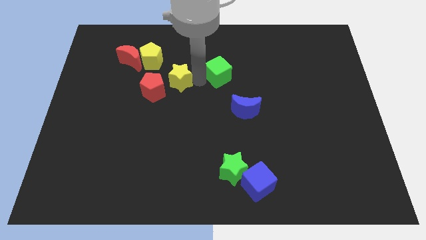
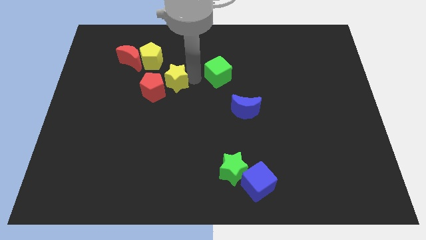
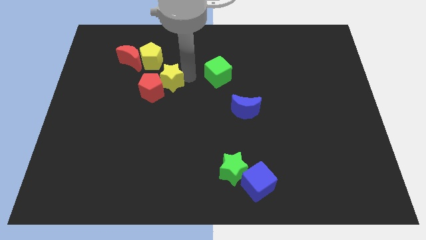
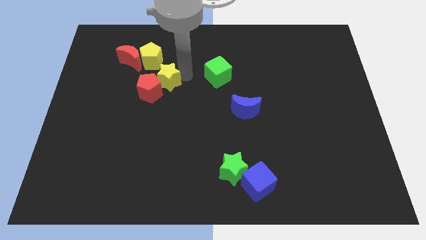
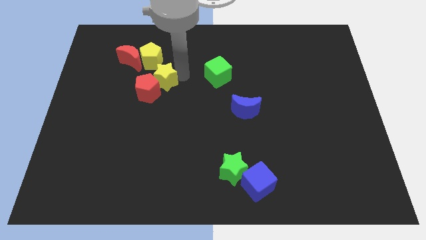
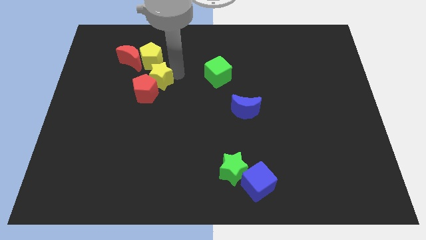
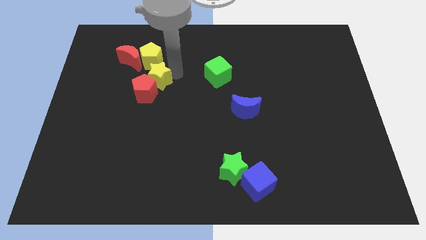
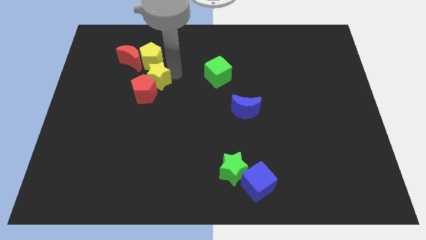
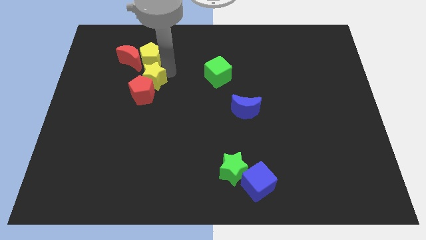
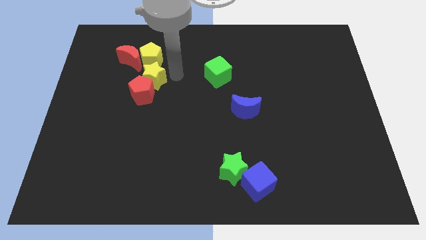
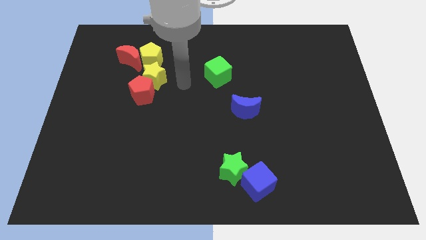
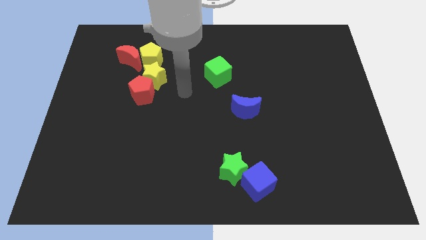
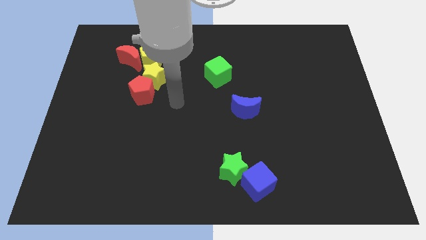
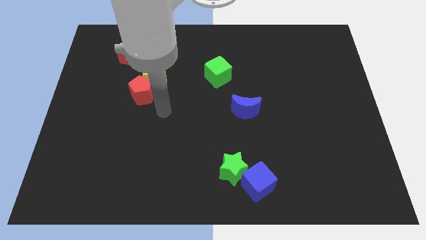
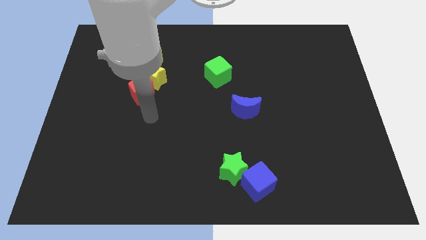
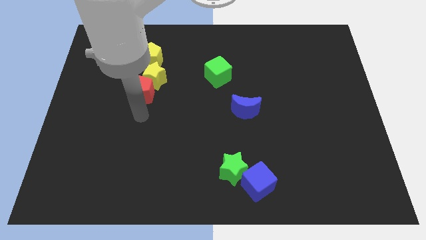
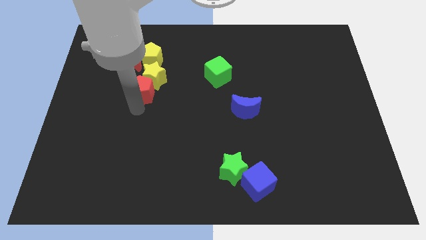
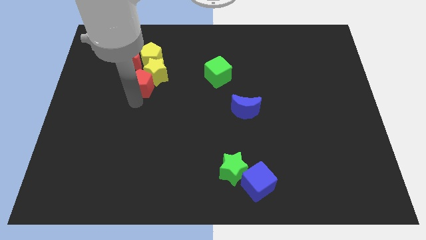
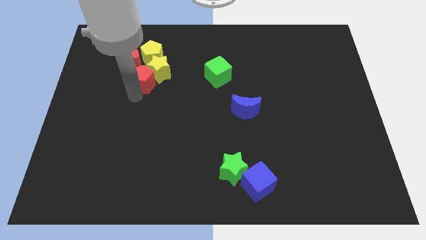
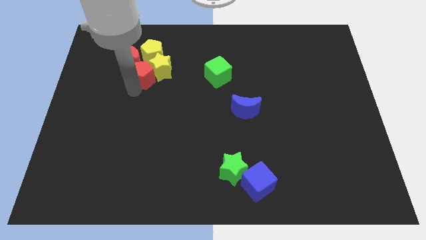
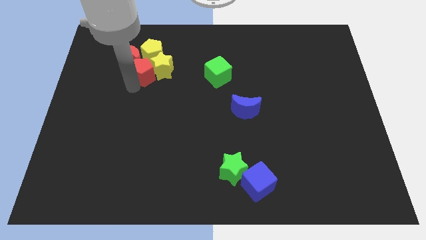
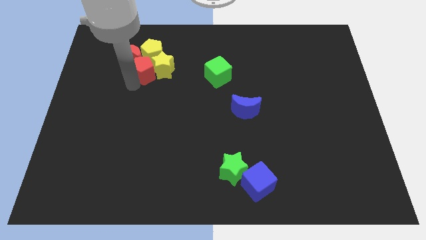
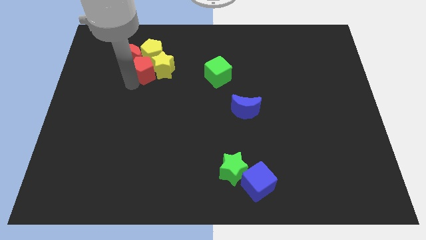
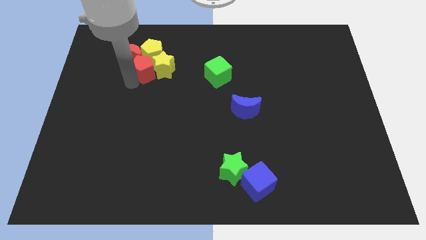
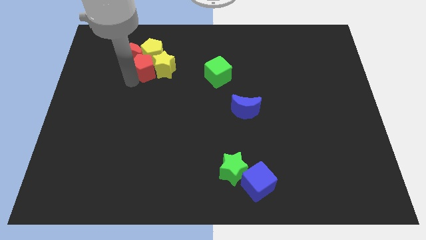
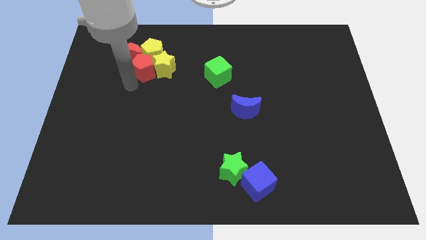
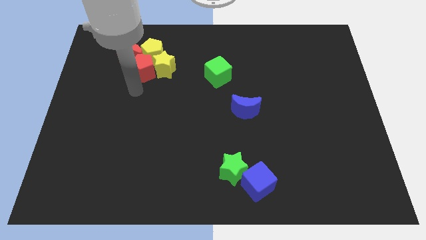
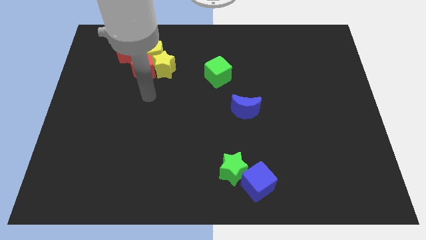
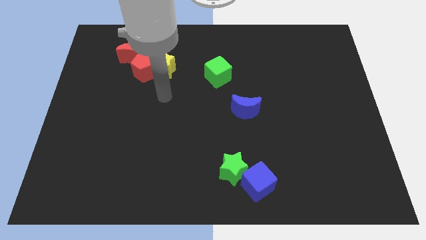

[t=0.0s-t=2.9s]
push the red and yellow blocks together to the left of the green cube

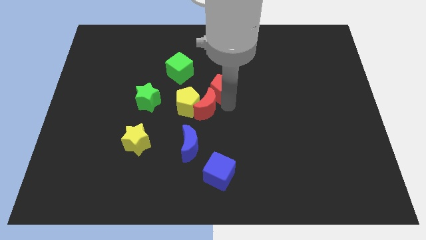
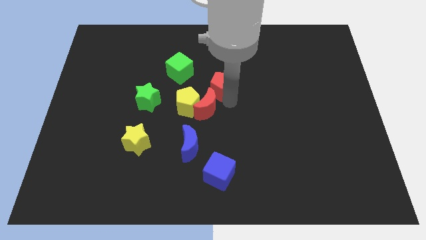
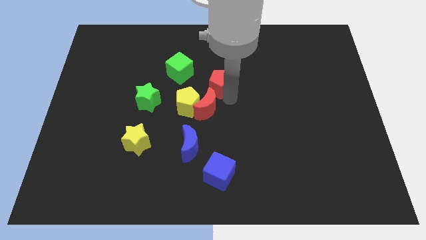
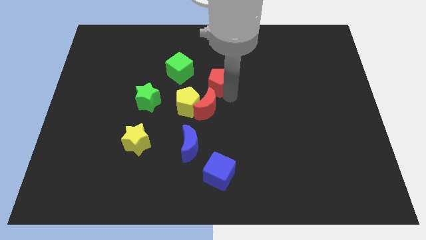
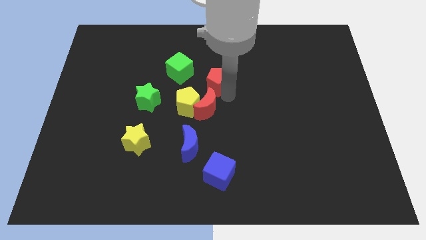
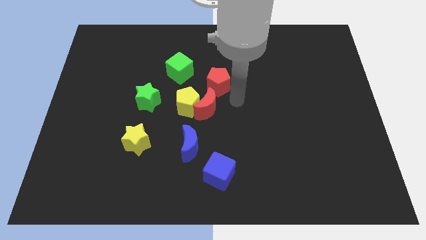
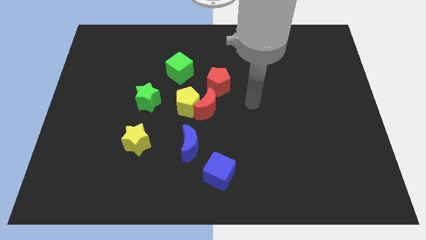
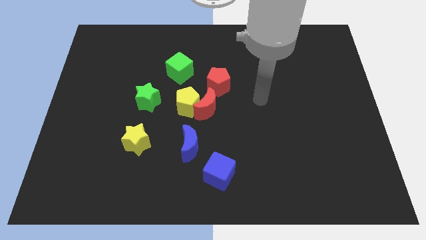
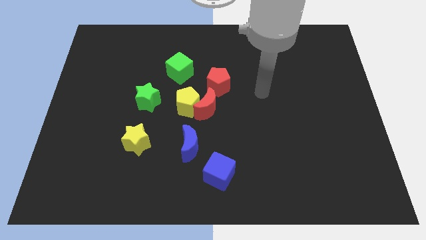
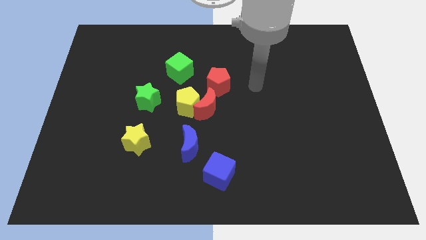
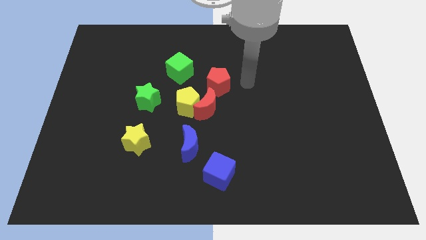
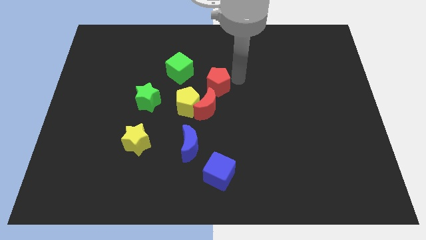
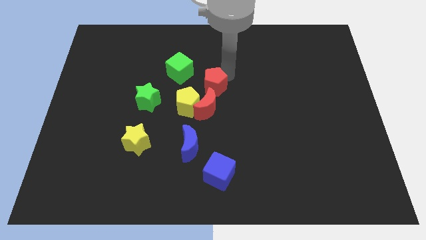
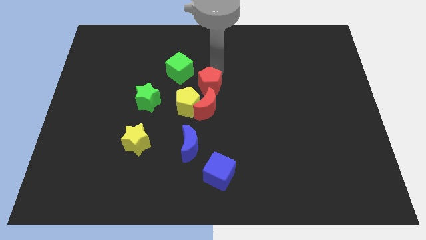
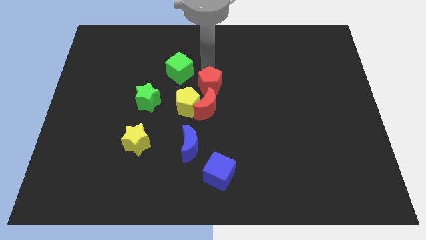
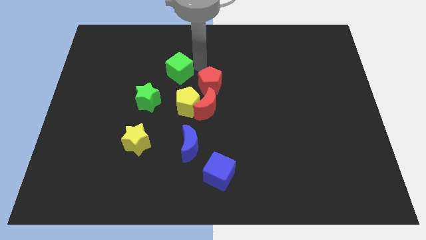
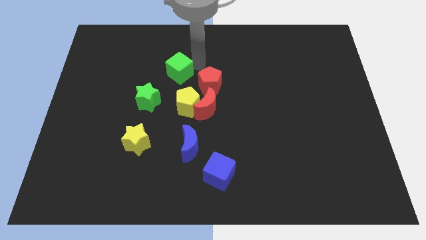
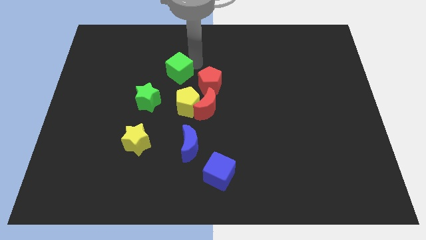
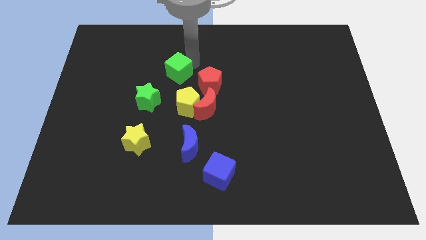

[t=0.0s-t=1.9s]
slightly move the red pentagon towards the right of the green cube

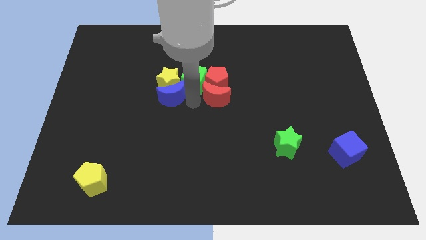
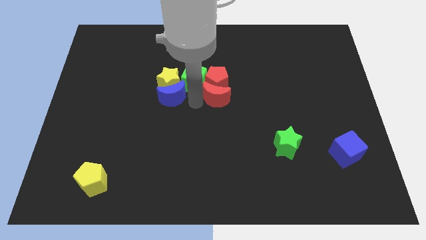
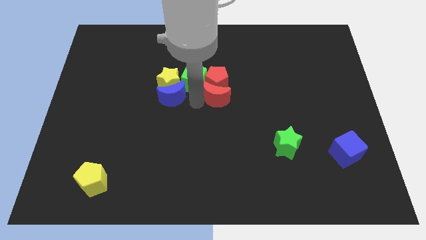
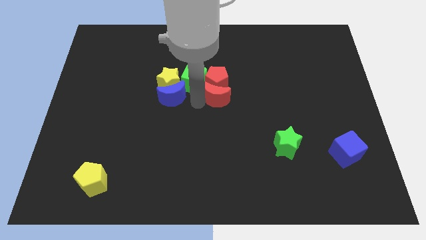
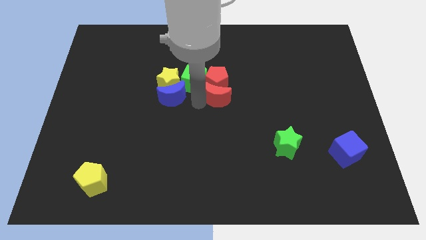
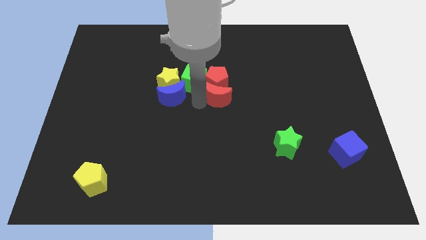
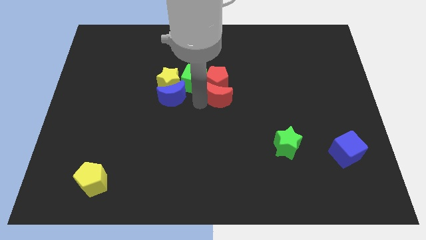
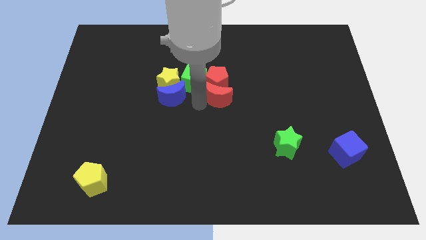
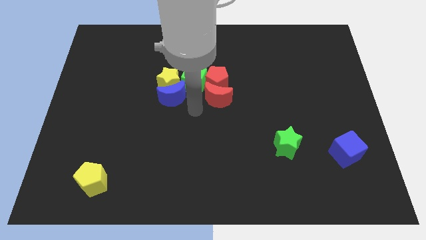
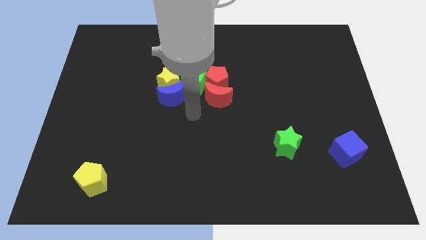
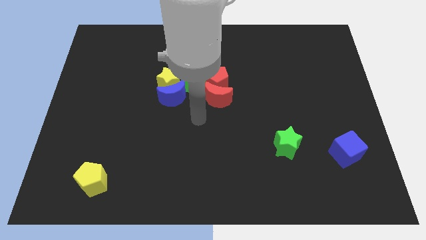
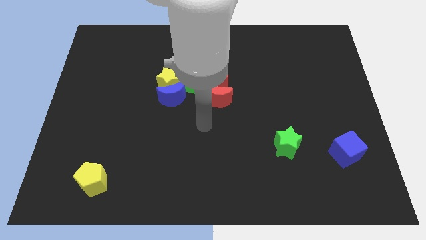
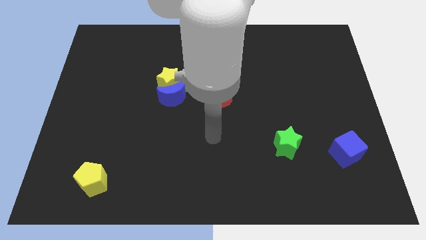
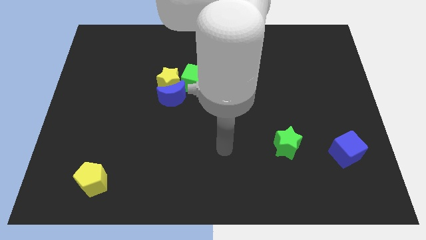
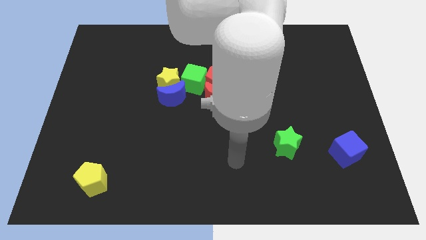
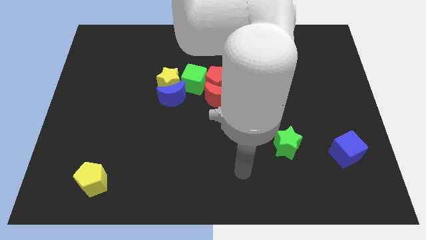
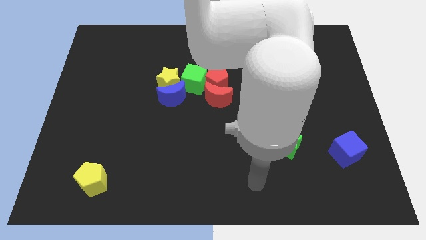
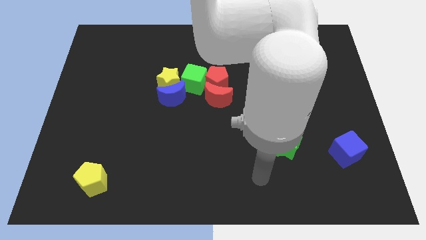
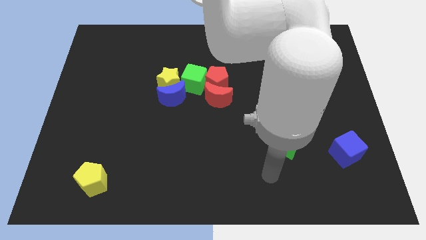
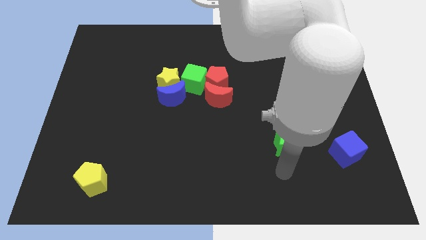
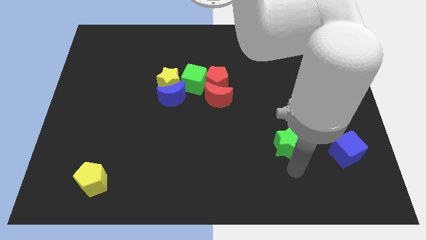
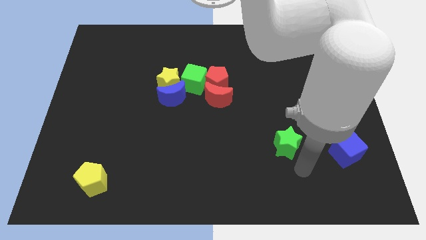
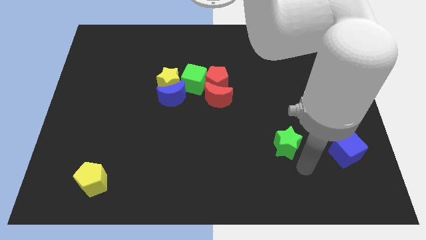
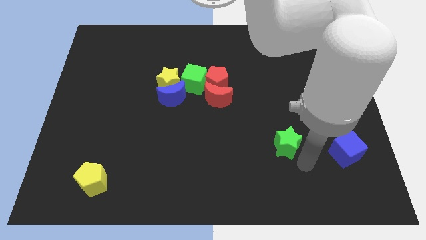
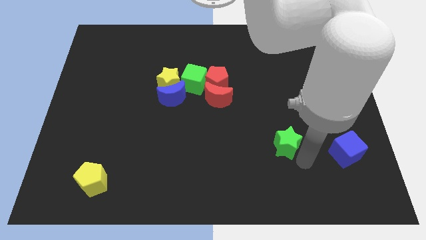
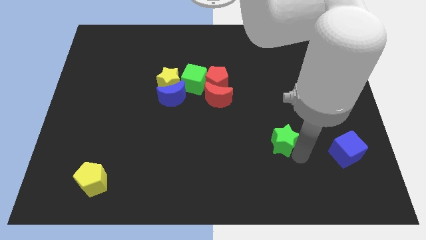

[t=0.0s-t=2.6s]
move your arm to the bottom of the green star

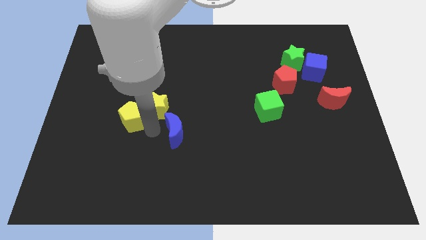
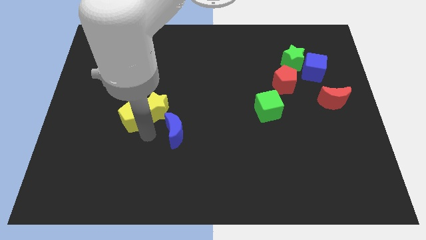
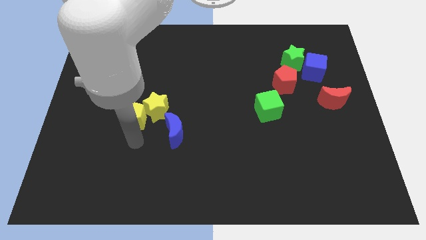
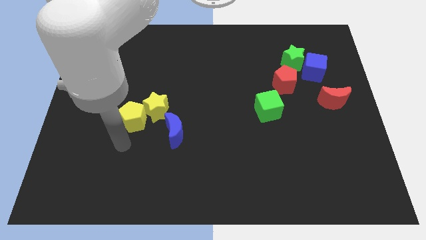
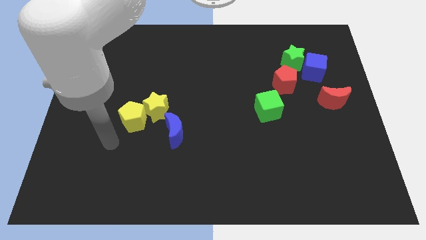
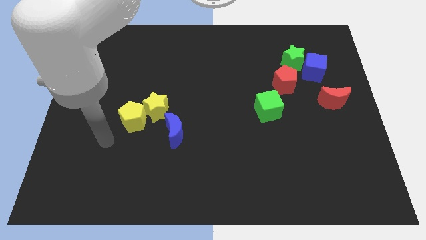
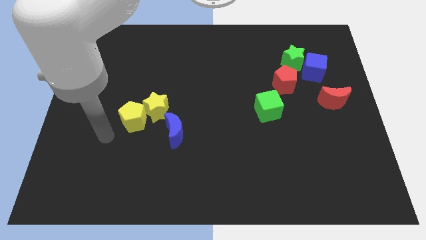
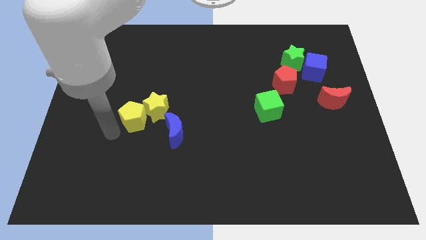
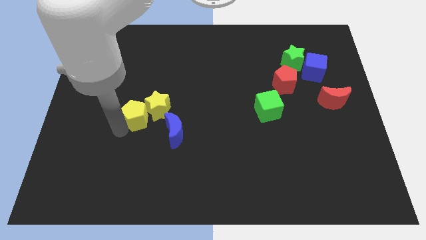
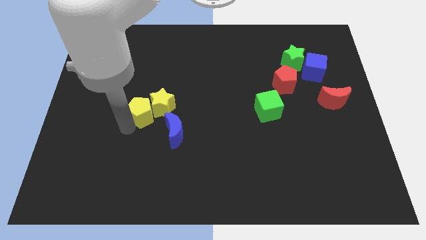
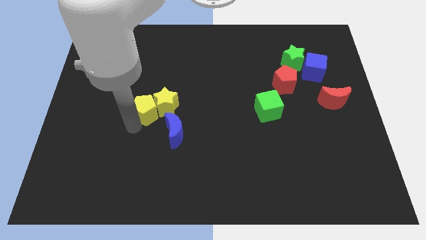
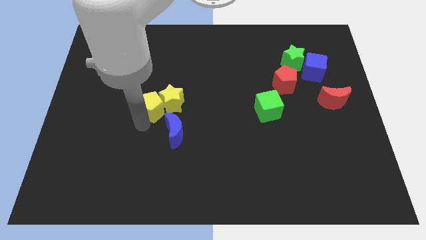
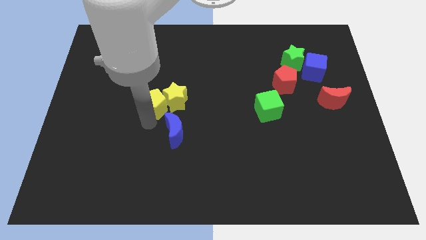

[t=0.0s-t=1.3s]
place the yellow star with the yellow pentagon

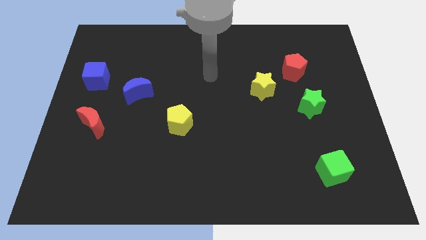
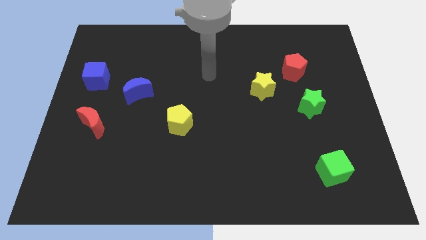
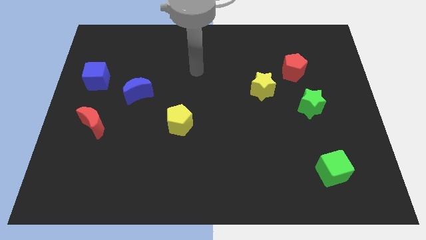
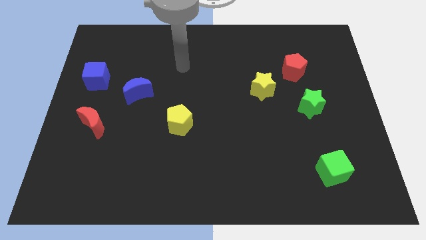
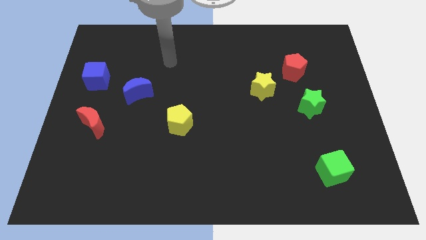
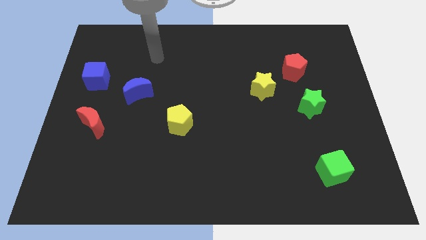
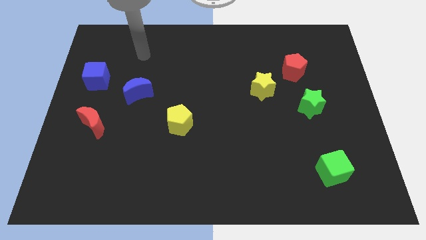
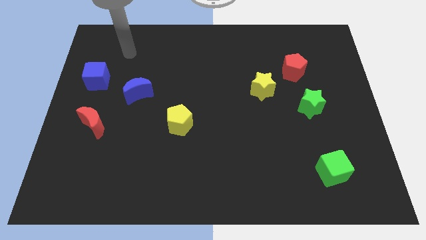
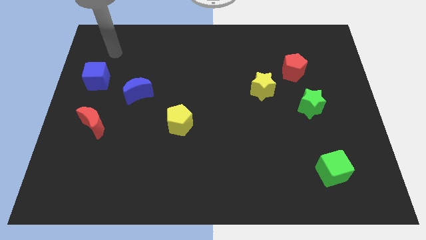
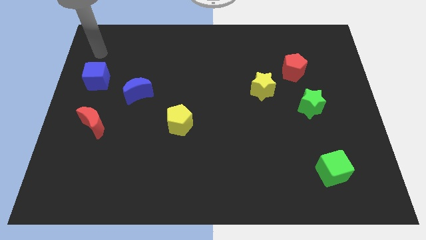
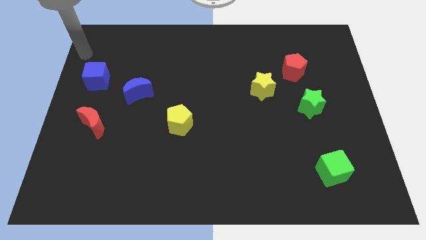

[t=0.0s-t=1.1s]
point your arm at the top of the blue cube
